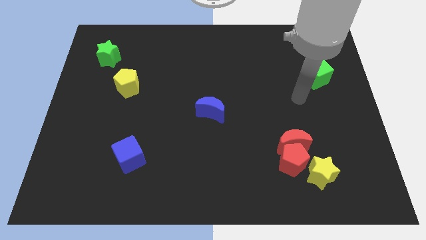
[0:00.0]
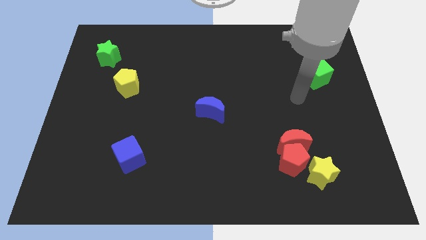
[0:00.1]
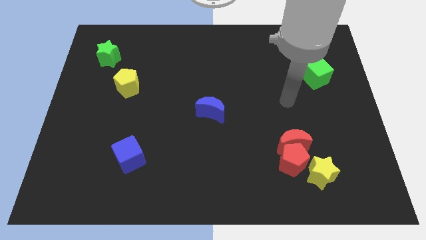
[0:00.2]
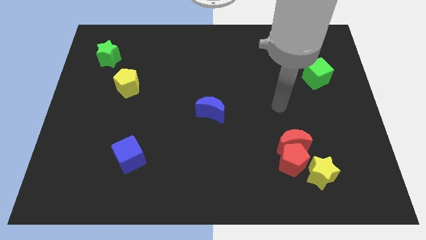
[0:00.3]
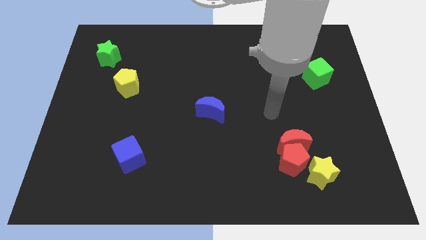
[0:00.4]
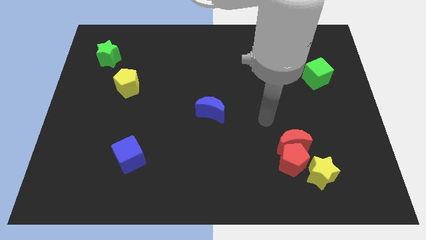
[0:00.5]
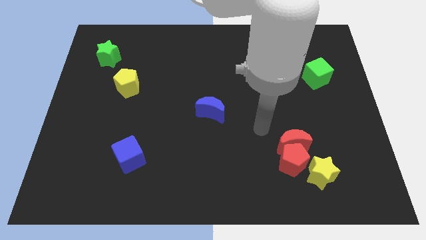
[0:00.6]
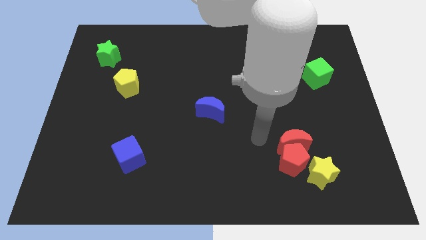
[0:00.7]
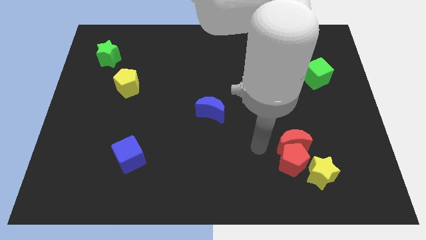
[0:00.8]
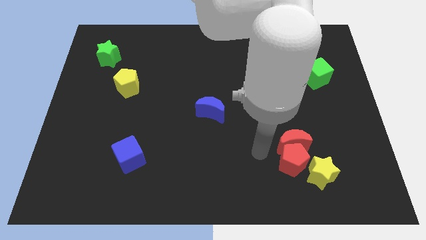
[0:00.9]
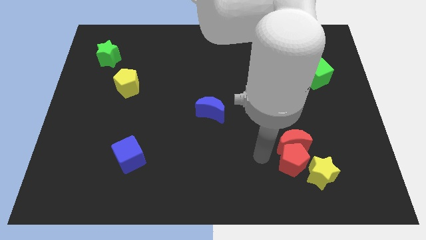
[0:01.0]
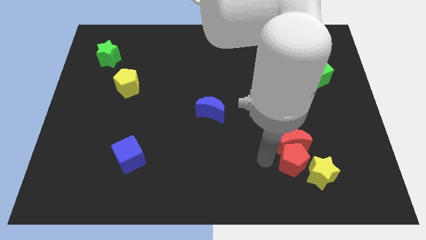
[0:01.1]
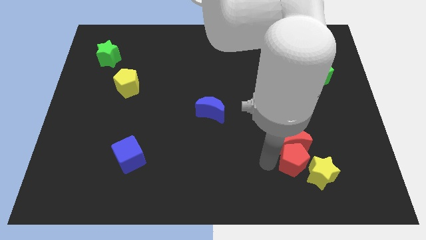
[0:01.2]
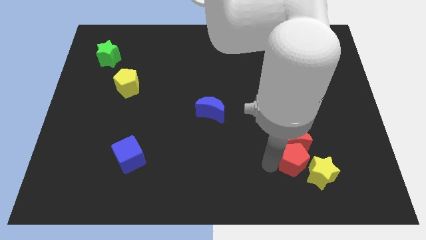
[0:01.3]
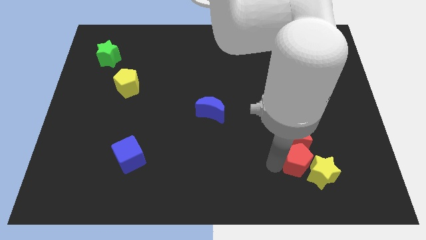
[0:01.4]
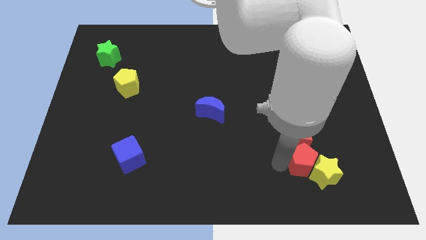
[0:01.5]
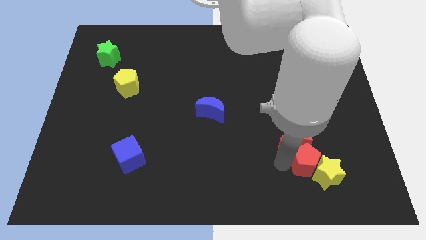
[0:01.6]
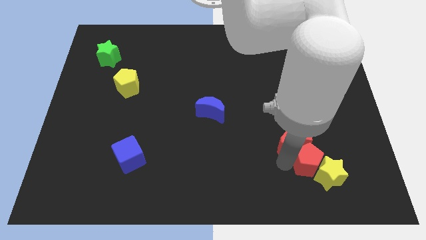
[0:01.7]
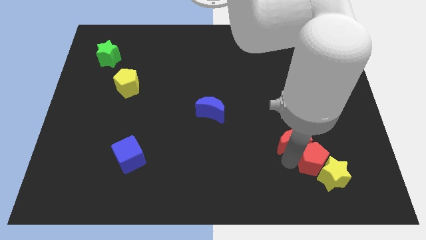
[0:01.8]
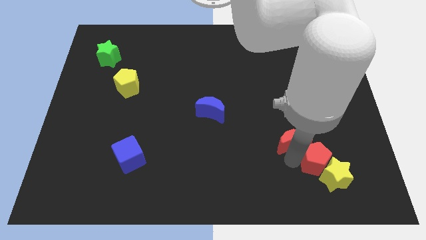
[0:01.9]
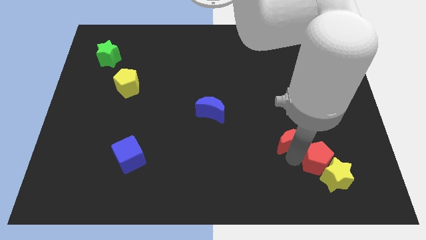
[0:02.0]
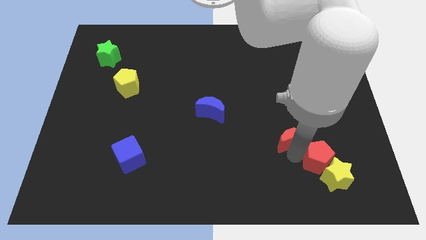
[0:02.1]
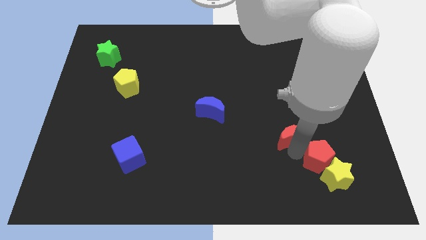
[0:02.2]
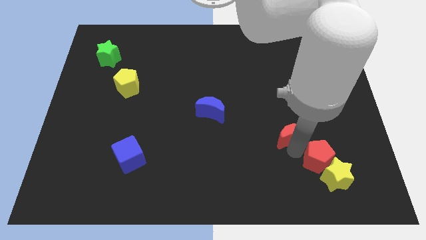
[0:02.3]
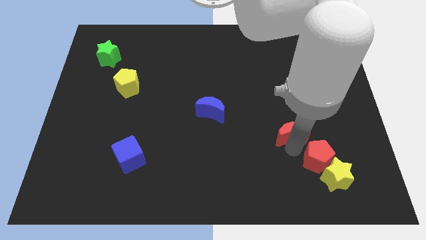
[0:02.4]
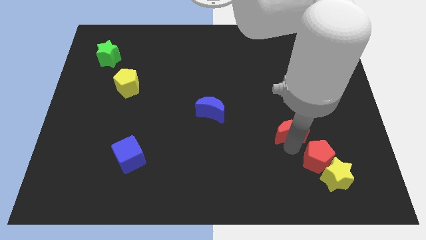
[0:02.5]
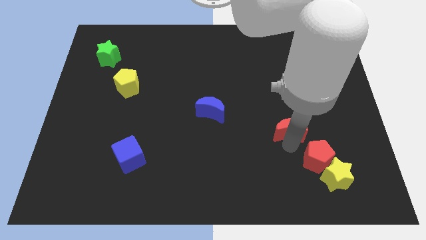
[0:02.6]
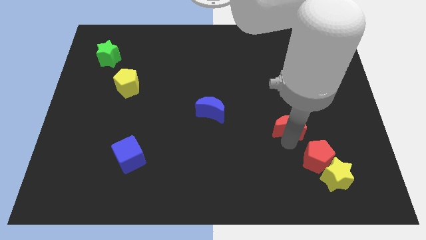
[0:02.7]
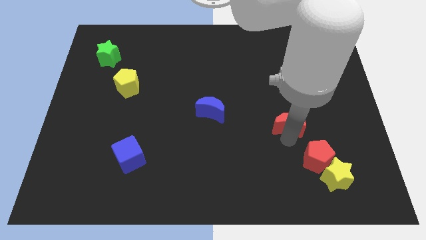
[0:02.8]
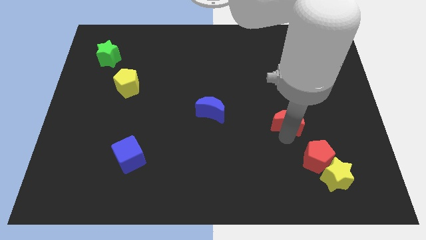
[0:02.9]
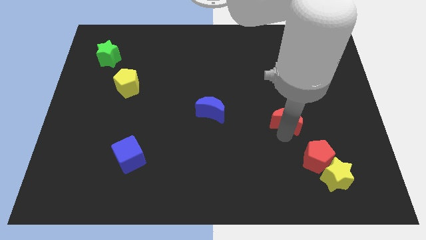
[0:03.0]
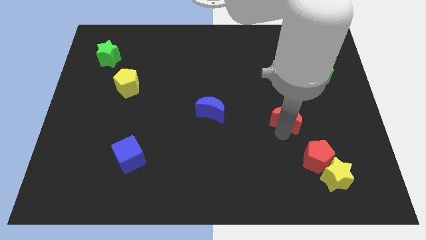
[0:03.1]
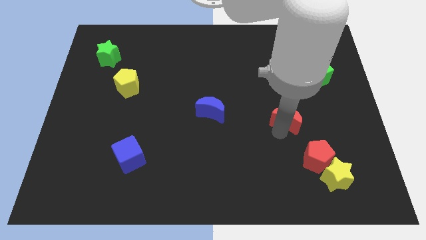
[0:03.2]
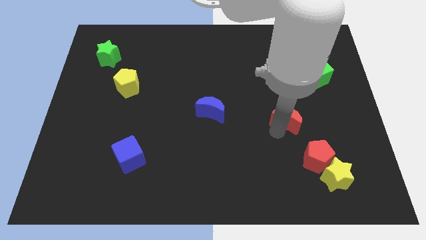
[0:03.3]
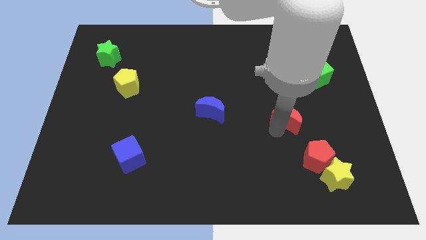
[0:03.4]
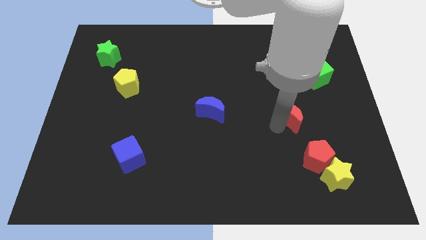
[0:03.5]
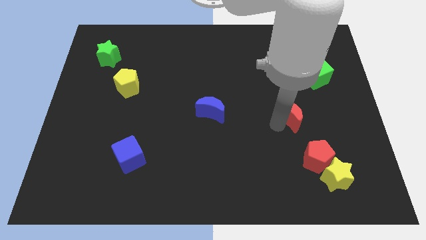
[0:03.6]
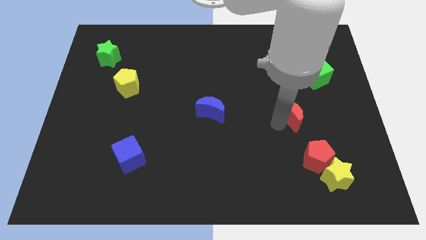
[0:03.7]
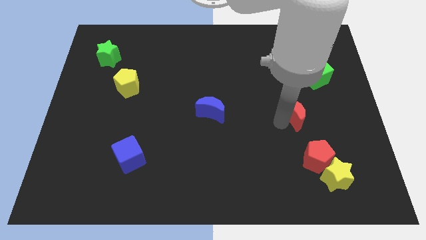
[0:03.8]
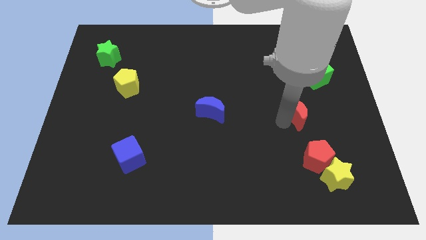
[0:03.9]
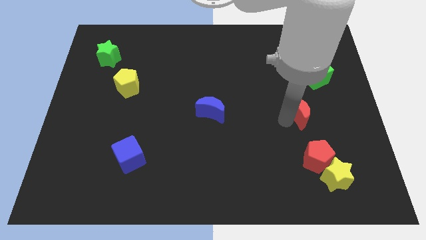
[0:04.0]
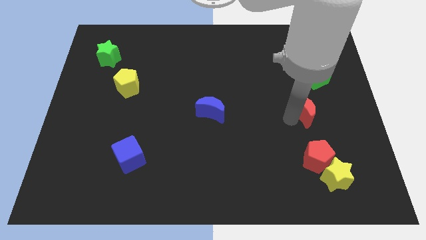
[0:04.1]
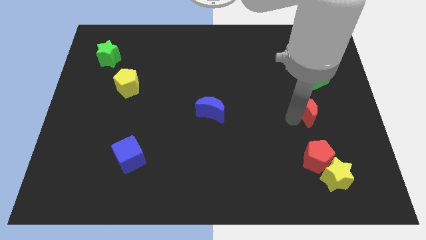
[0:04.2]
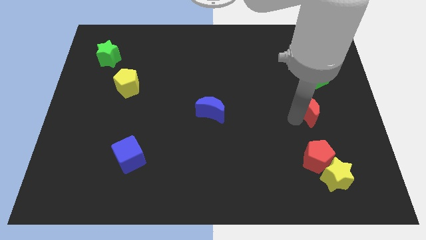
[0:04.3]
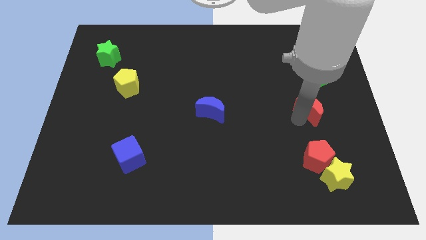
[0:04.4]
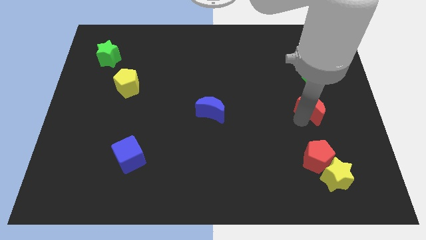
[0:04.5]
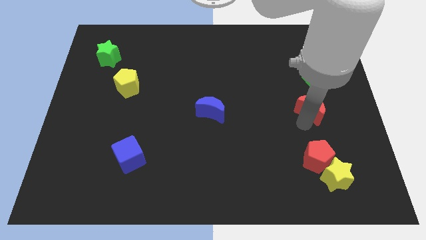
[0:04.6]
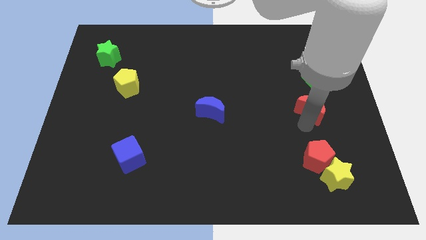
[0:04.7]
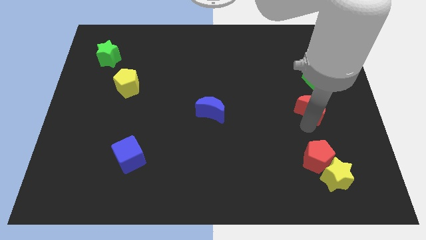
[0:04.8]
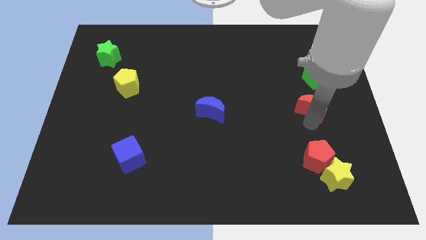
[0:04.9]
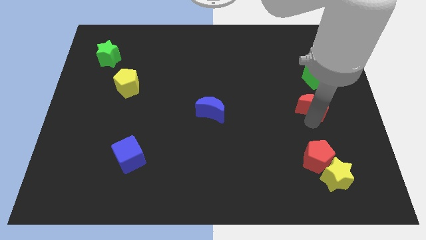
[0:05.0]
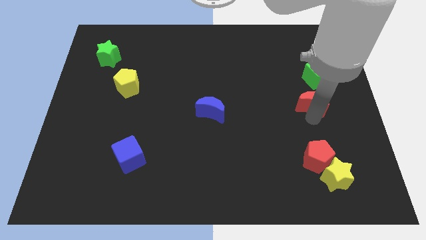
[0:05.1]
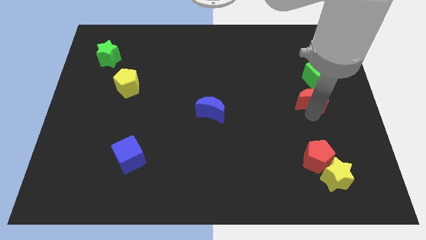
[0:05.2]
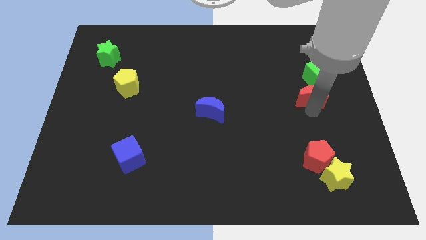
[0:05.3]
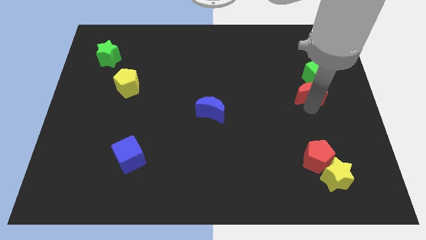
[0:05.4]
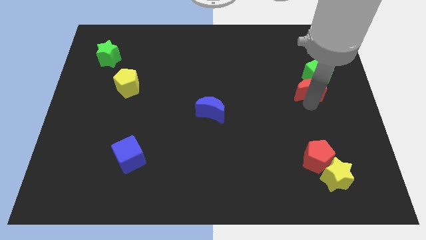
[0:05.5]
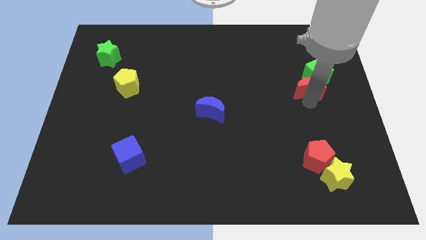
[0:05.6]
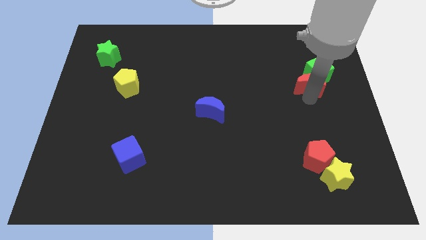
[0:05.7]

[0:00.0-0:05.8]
move the red moon next to the green cube

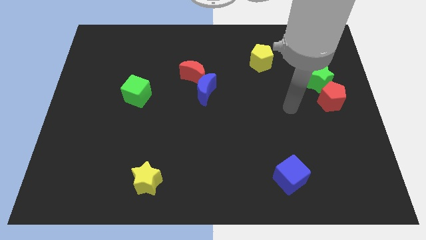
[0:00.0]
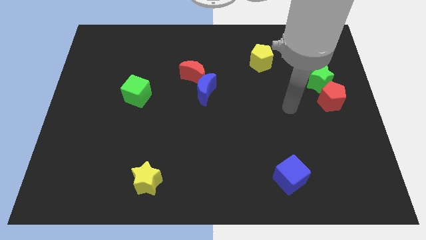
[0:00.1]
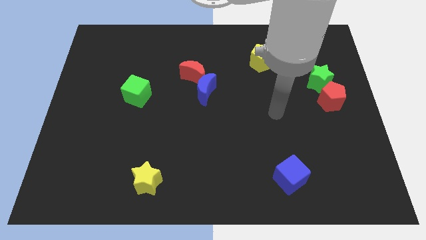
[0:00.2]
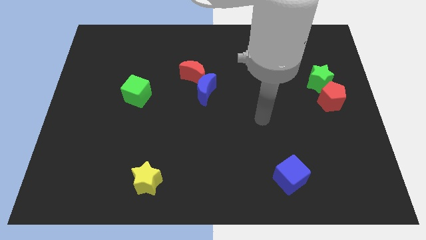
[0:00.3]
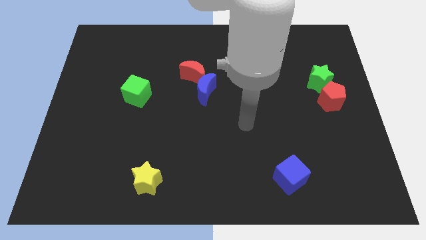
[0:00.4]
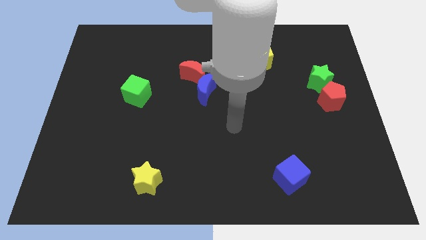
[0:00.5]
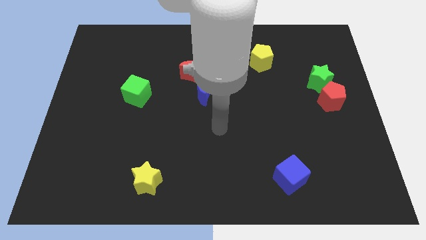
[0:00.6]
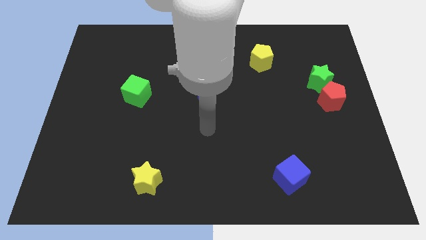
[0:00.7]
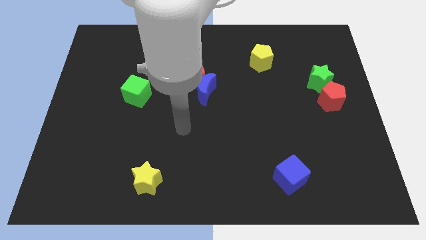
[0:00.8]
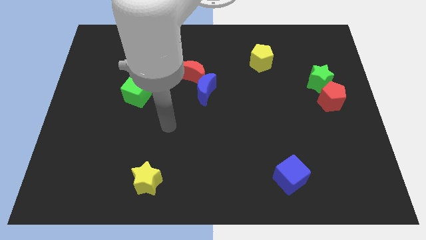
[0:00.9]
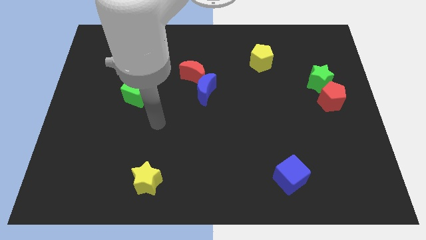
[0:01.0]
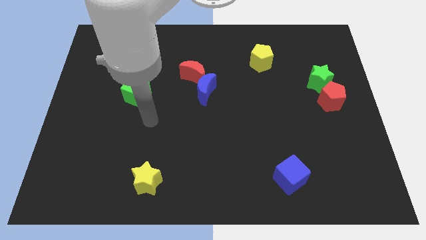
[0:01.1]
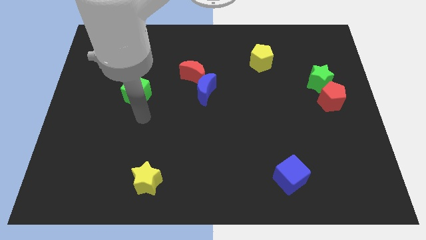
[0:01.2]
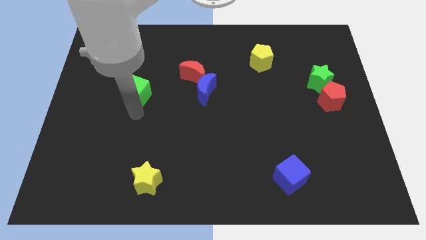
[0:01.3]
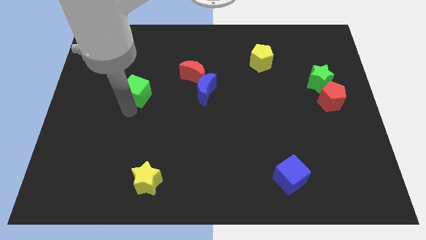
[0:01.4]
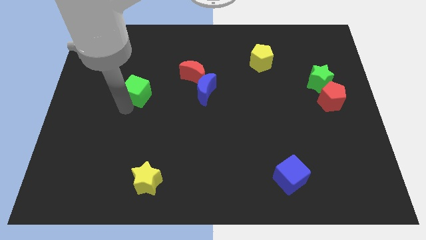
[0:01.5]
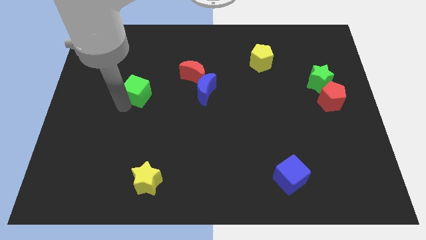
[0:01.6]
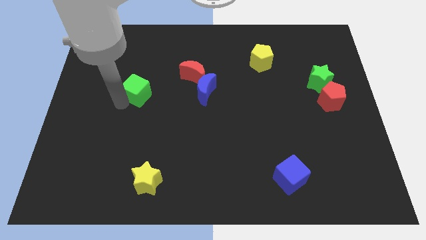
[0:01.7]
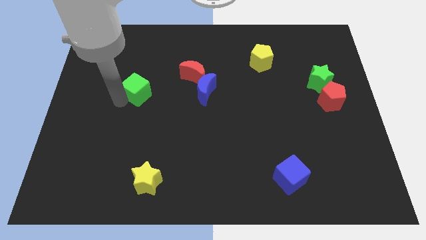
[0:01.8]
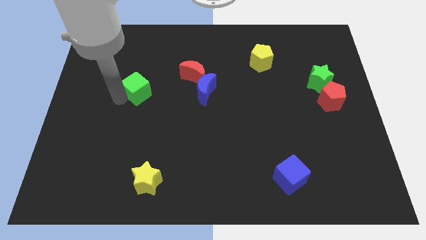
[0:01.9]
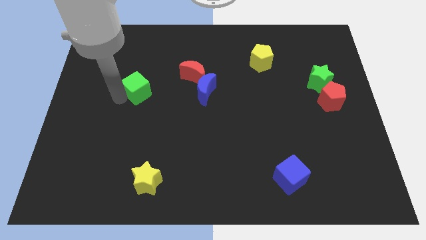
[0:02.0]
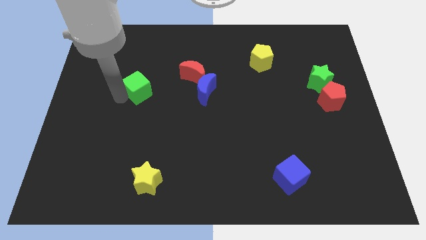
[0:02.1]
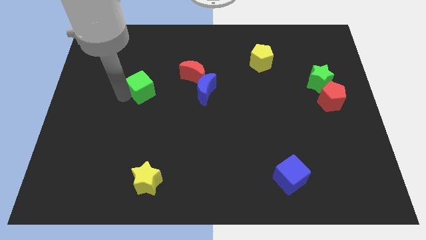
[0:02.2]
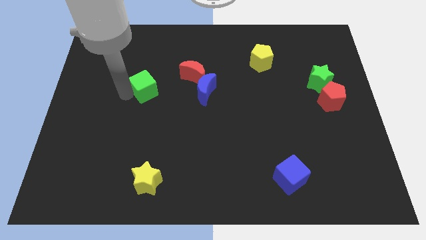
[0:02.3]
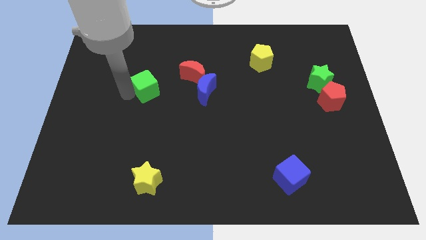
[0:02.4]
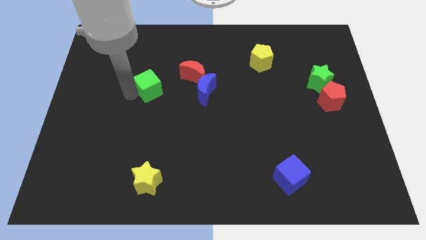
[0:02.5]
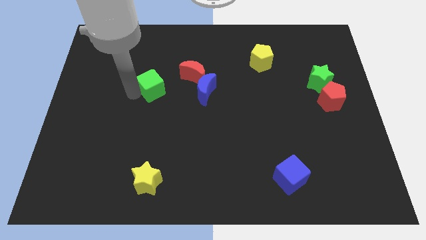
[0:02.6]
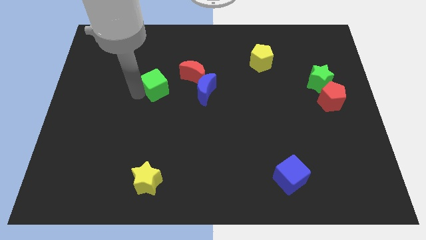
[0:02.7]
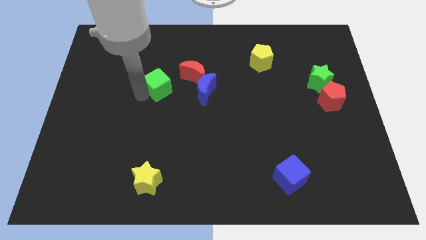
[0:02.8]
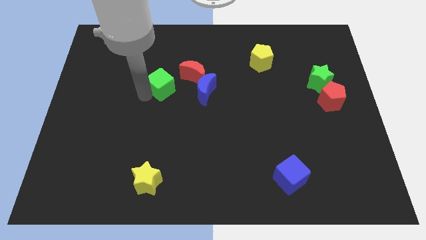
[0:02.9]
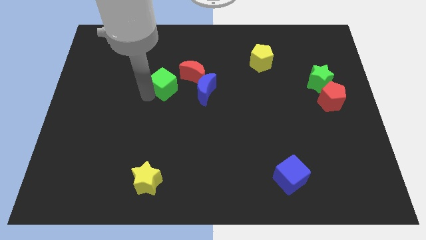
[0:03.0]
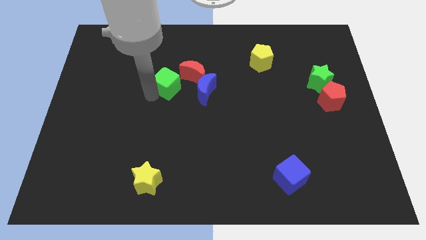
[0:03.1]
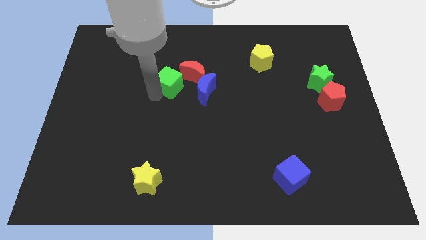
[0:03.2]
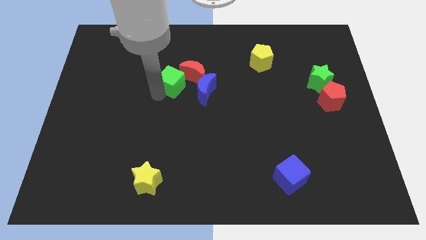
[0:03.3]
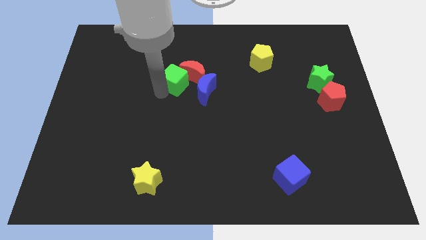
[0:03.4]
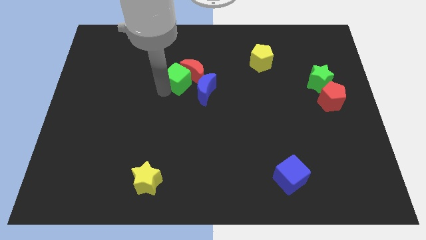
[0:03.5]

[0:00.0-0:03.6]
move the green cube towards the red moon
